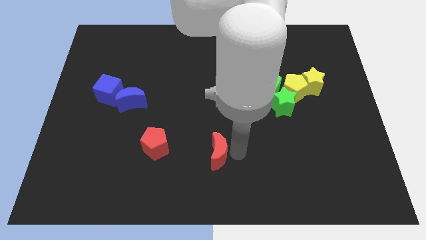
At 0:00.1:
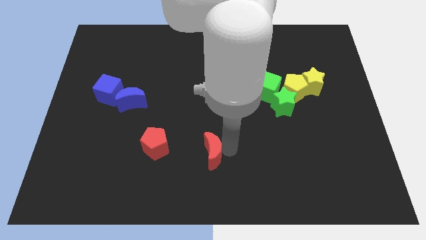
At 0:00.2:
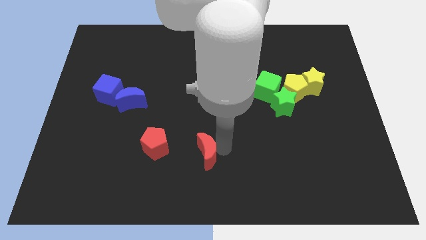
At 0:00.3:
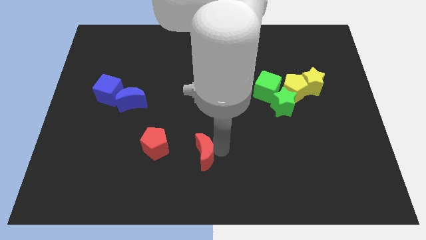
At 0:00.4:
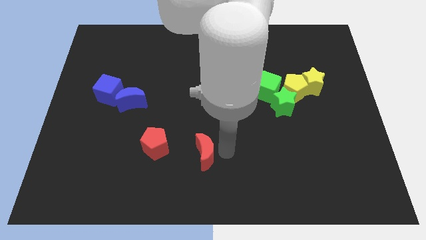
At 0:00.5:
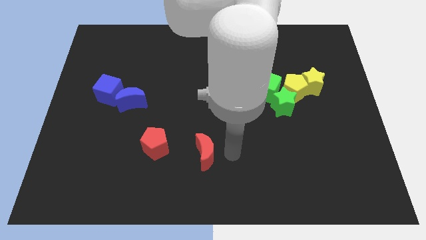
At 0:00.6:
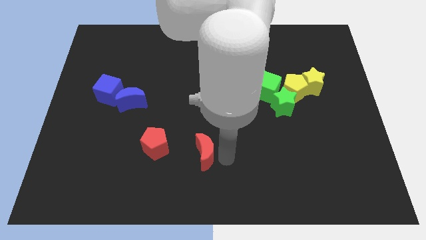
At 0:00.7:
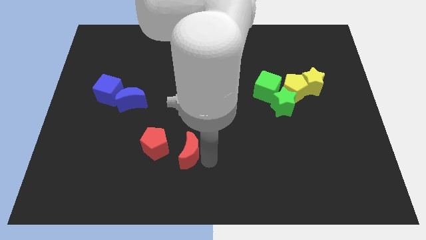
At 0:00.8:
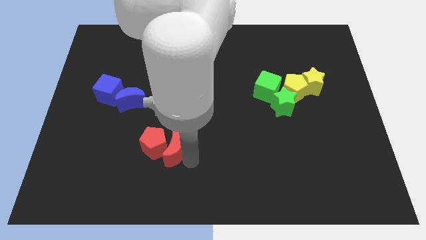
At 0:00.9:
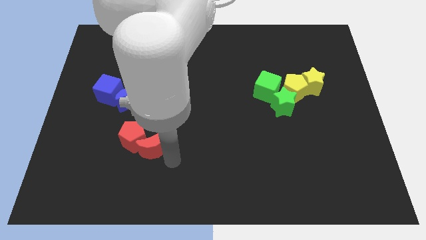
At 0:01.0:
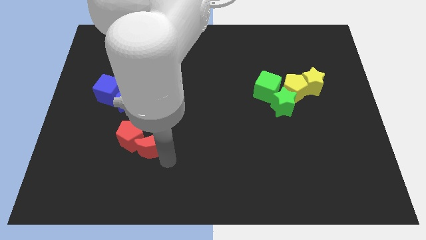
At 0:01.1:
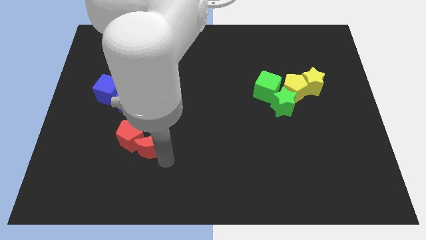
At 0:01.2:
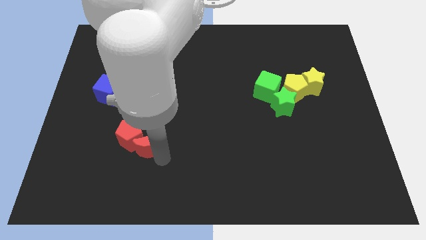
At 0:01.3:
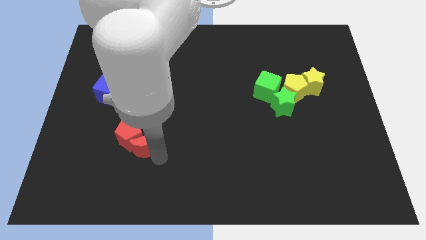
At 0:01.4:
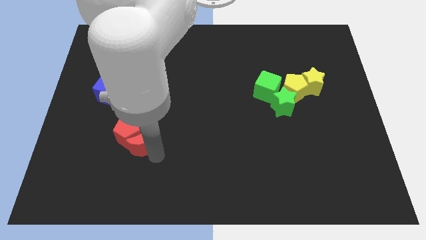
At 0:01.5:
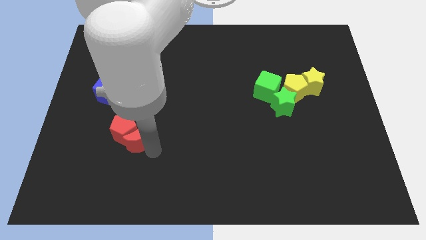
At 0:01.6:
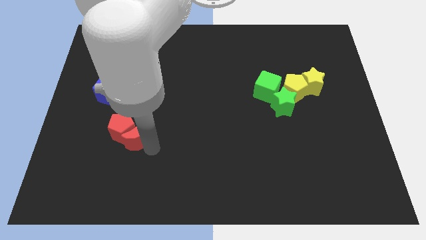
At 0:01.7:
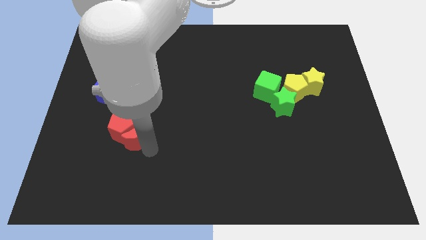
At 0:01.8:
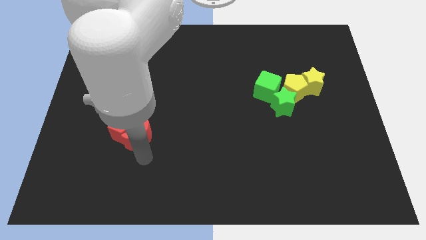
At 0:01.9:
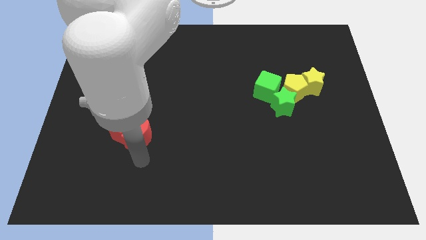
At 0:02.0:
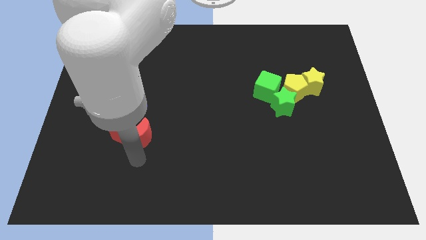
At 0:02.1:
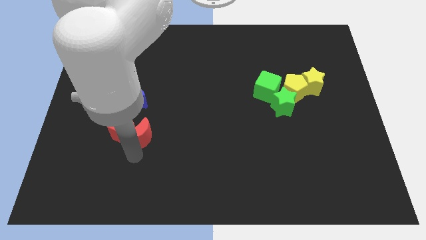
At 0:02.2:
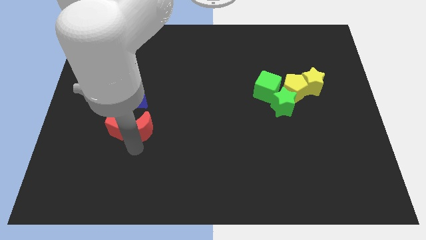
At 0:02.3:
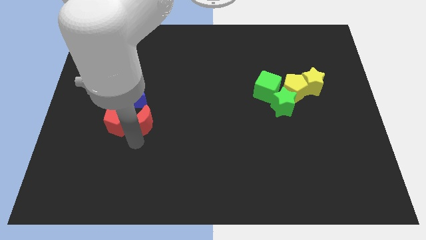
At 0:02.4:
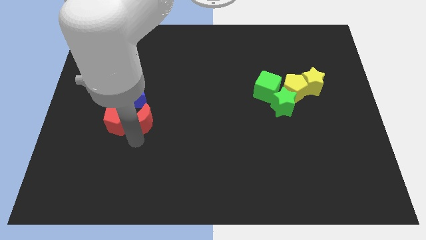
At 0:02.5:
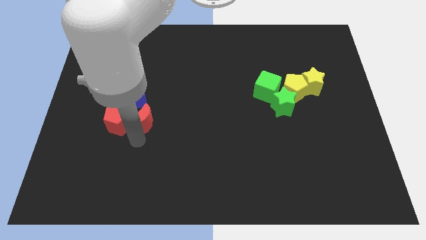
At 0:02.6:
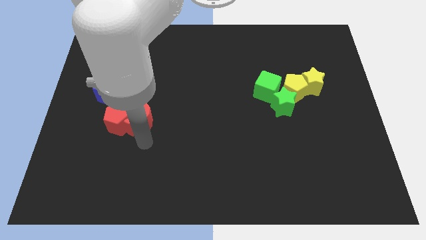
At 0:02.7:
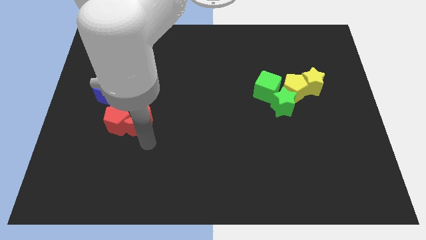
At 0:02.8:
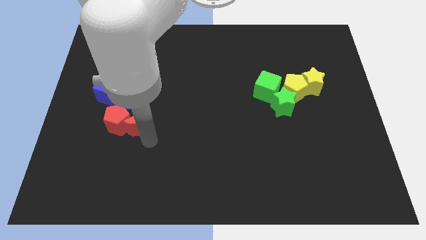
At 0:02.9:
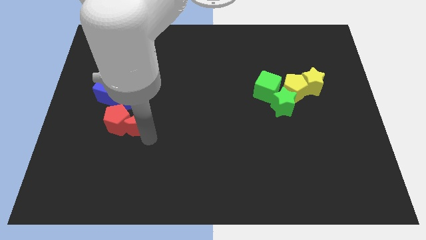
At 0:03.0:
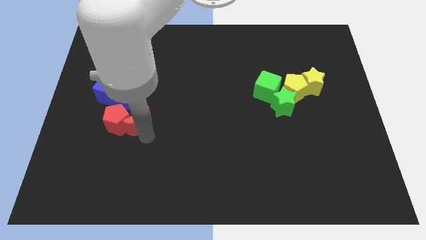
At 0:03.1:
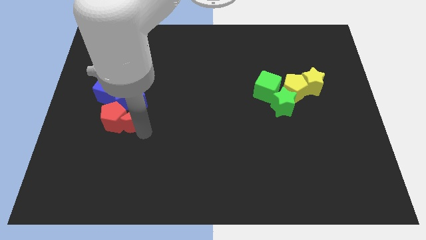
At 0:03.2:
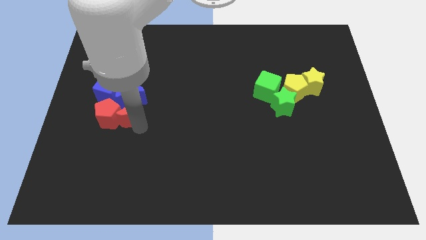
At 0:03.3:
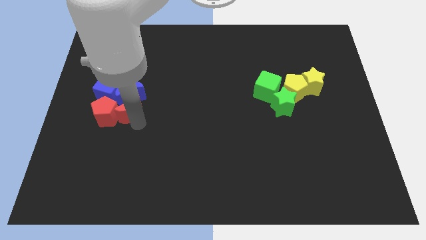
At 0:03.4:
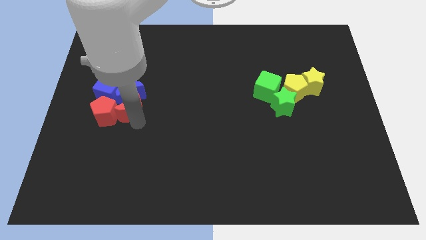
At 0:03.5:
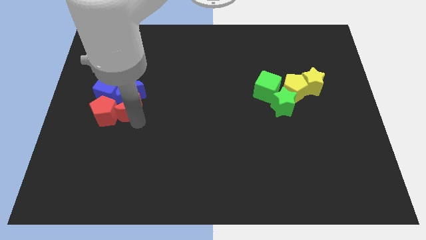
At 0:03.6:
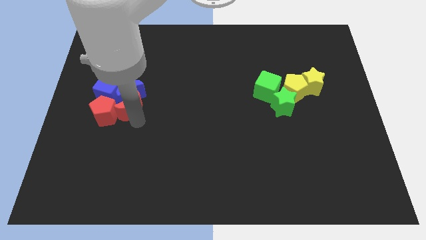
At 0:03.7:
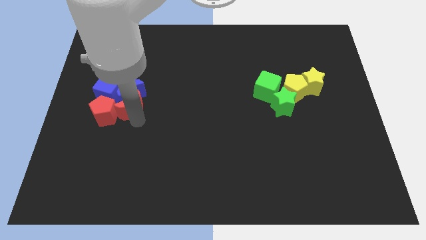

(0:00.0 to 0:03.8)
push the red blocks down to the blue blocks

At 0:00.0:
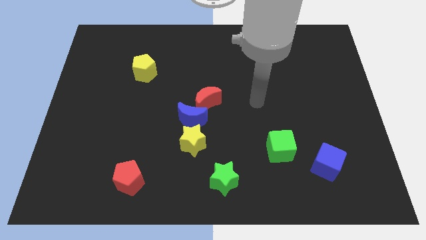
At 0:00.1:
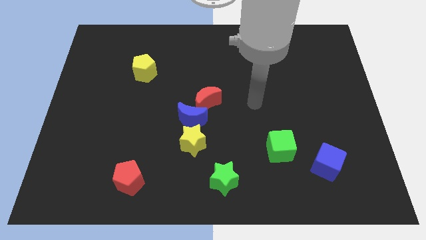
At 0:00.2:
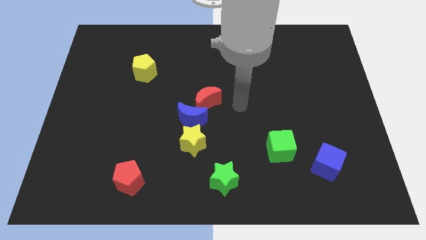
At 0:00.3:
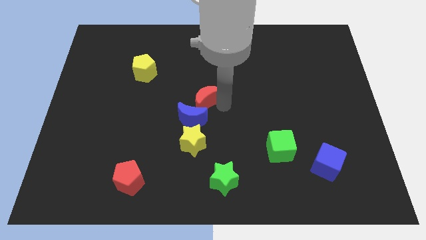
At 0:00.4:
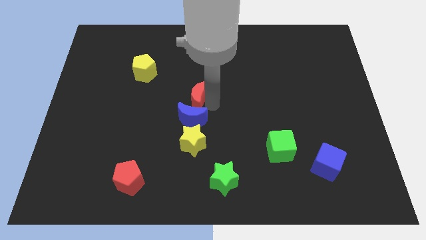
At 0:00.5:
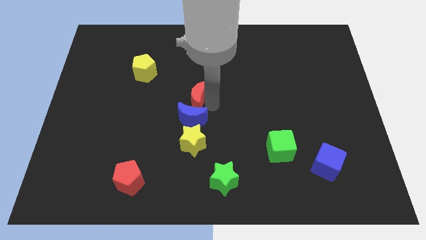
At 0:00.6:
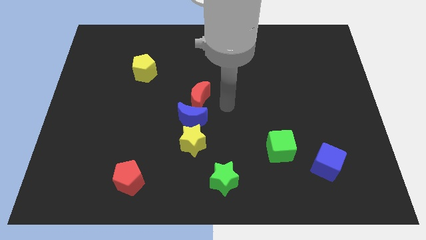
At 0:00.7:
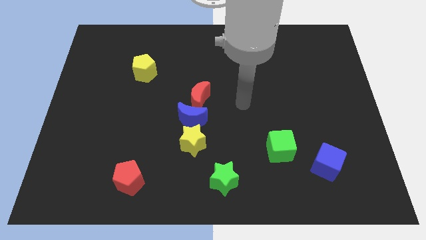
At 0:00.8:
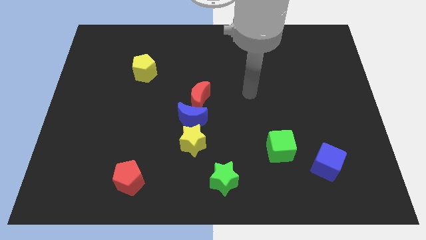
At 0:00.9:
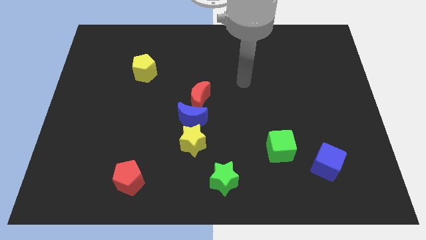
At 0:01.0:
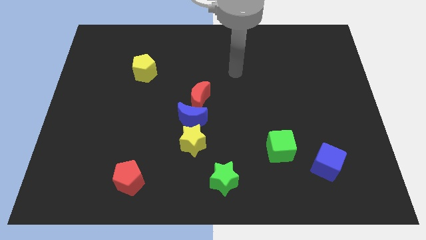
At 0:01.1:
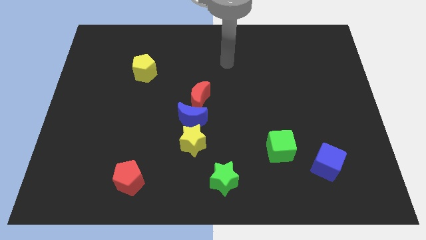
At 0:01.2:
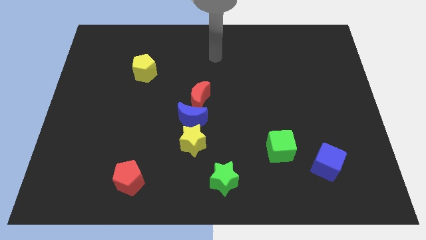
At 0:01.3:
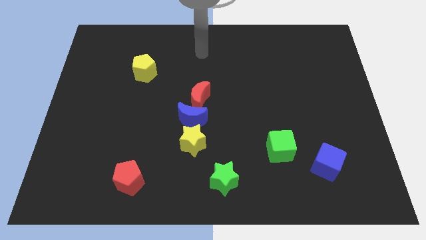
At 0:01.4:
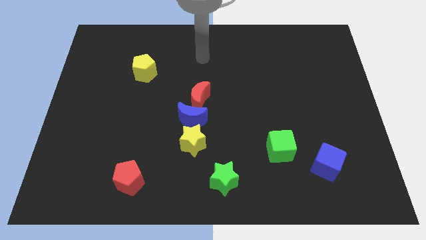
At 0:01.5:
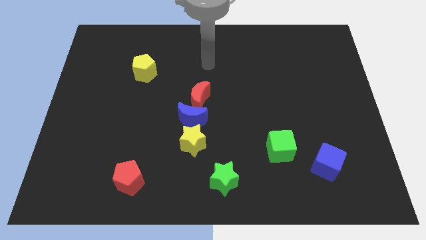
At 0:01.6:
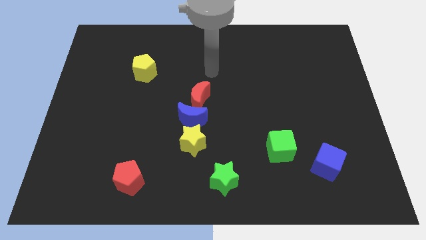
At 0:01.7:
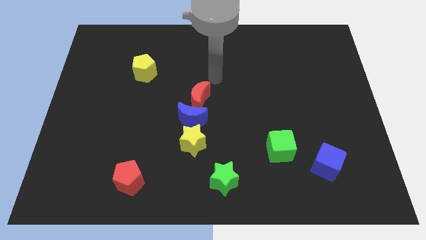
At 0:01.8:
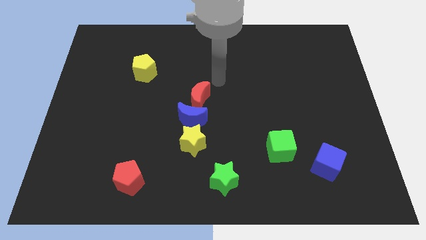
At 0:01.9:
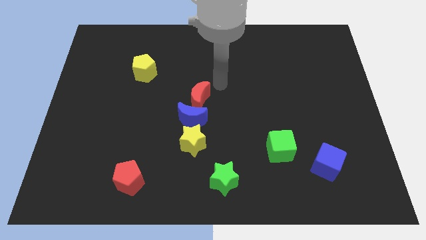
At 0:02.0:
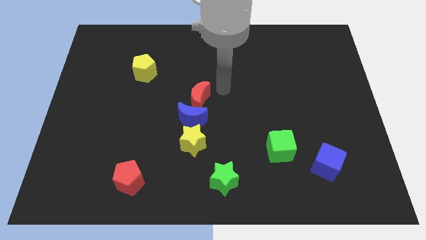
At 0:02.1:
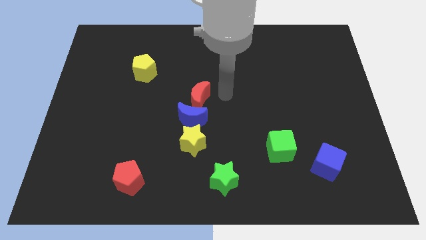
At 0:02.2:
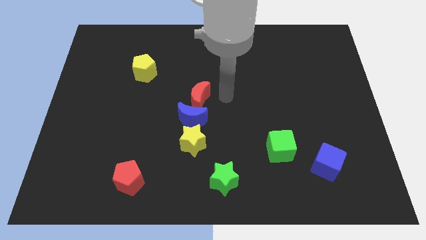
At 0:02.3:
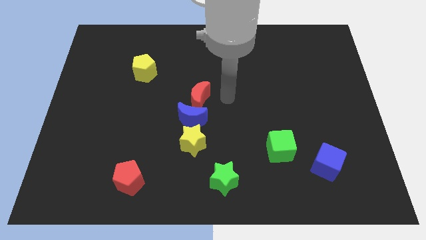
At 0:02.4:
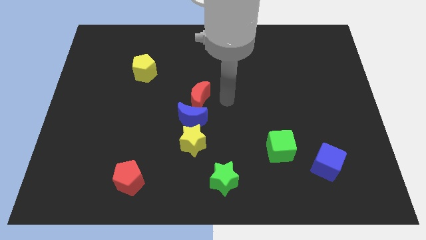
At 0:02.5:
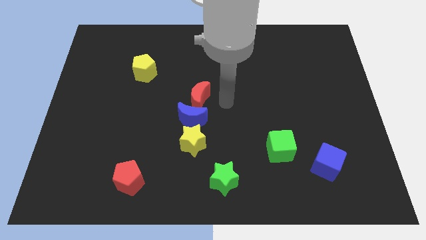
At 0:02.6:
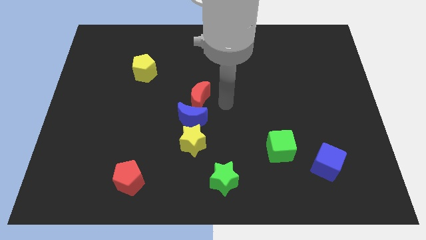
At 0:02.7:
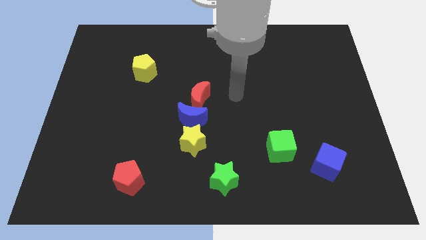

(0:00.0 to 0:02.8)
move your arm towards the center and slightly push red moon

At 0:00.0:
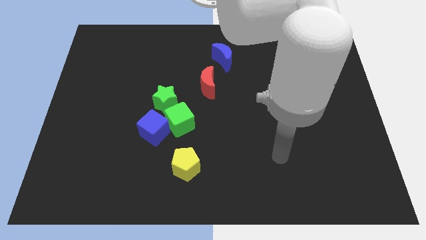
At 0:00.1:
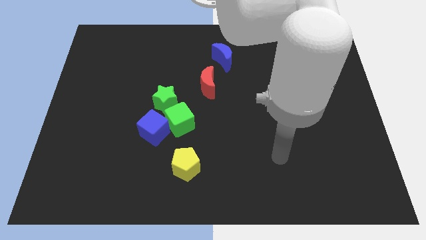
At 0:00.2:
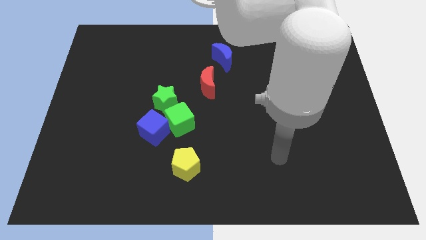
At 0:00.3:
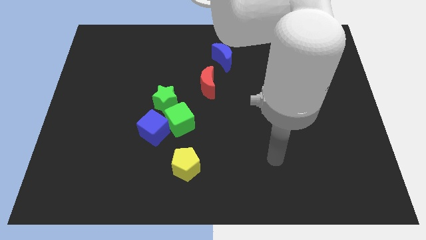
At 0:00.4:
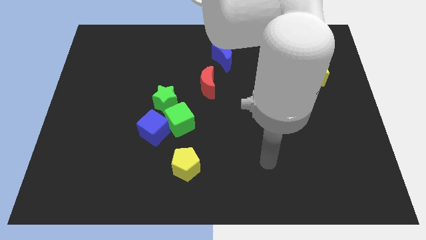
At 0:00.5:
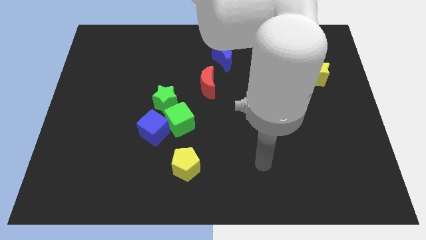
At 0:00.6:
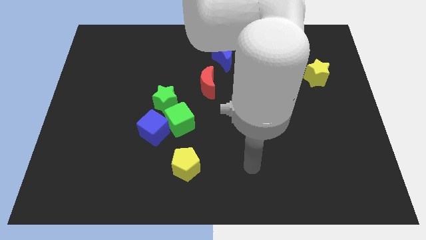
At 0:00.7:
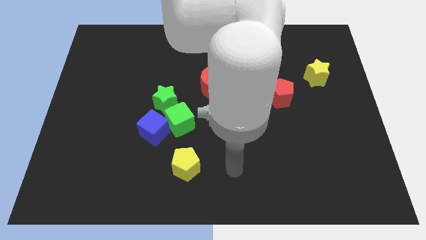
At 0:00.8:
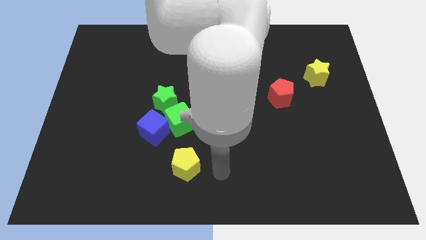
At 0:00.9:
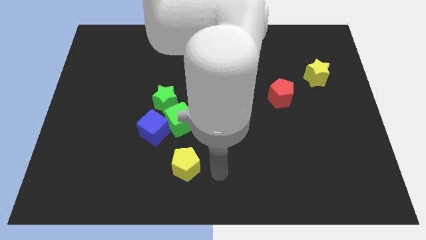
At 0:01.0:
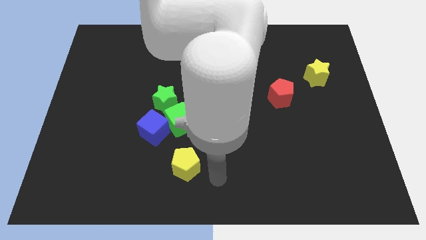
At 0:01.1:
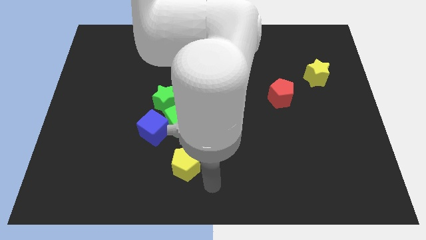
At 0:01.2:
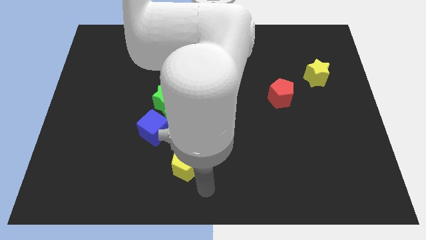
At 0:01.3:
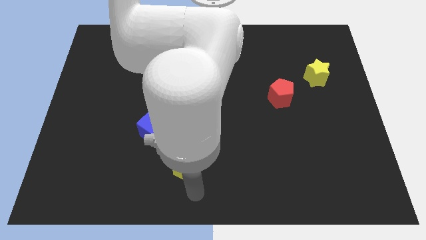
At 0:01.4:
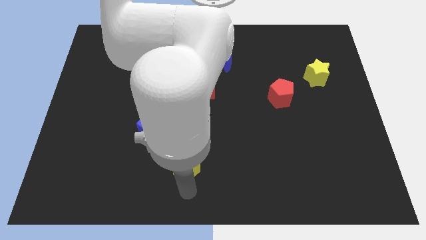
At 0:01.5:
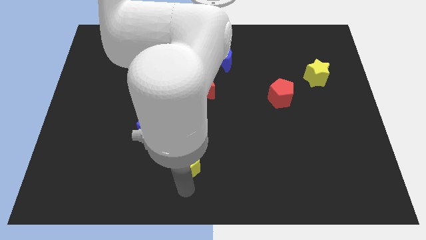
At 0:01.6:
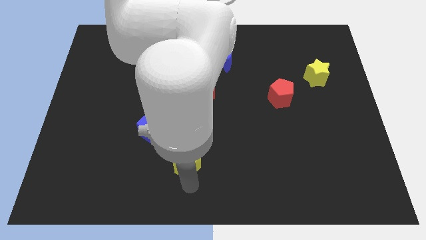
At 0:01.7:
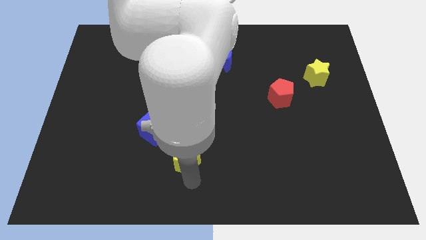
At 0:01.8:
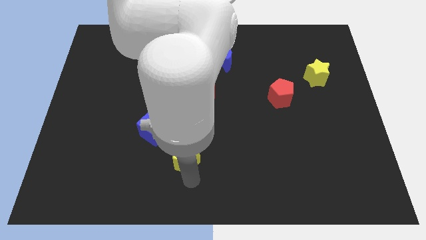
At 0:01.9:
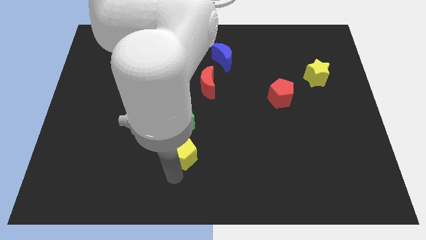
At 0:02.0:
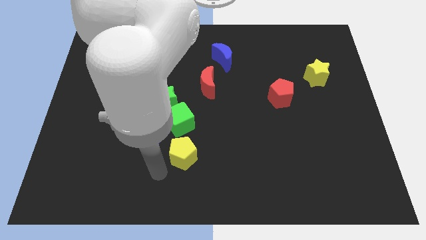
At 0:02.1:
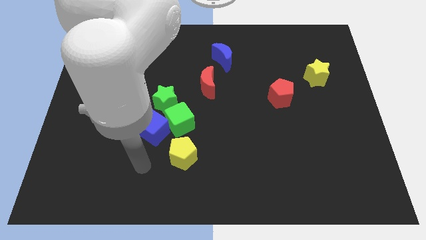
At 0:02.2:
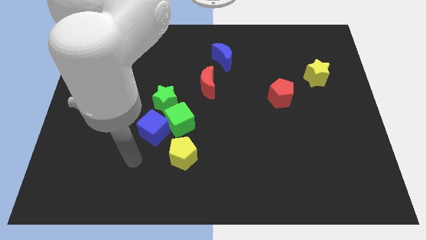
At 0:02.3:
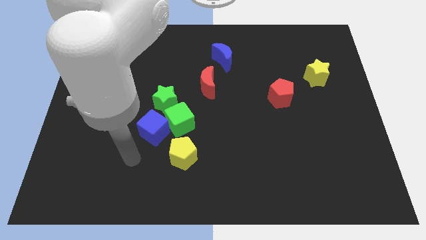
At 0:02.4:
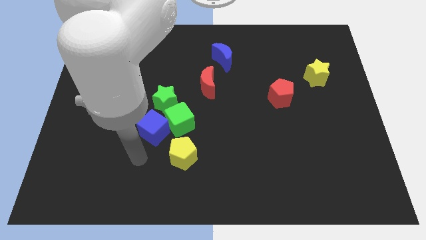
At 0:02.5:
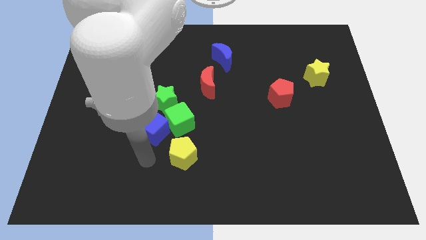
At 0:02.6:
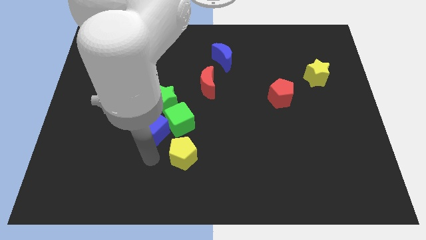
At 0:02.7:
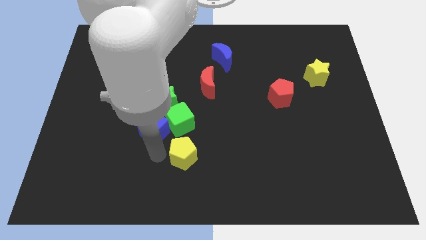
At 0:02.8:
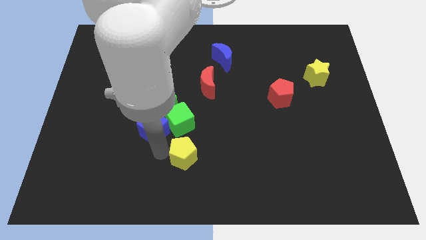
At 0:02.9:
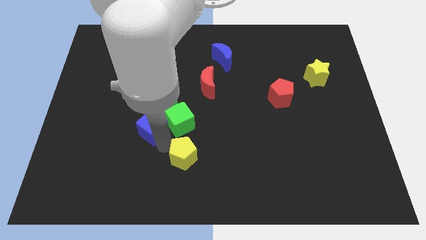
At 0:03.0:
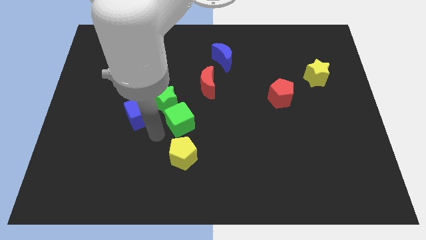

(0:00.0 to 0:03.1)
move the yellow pentagon slightly upwards
